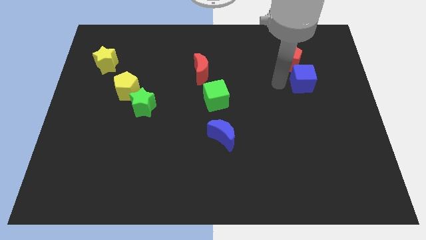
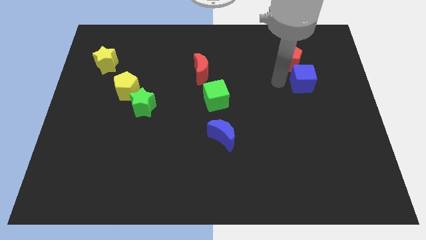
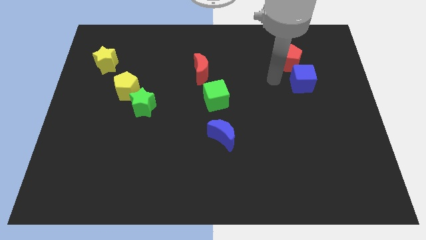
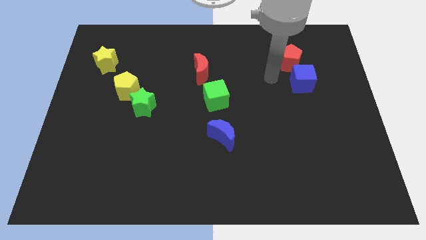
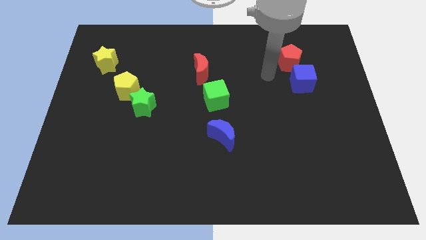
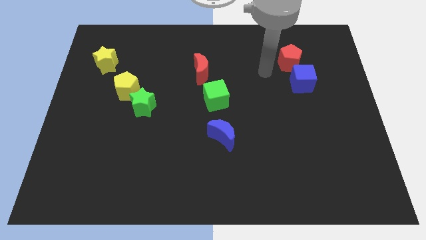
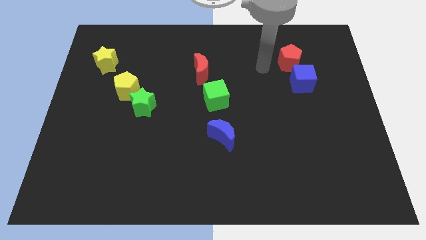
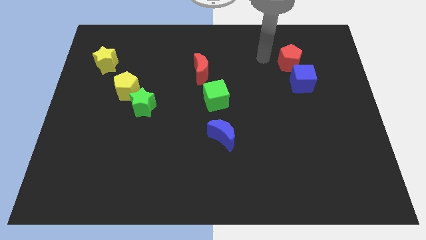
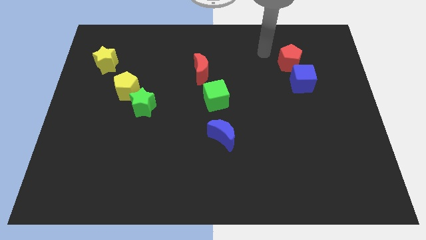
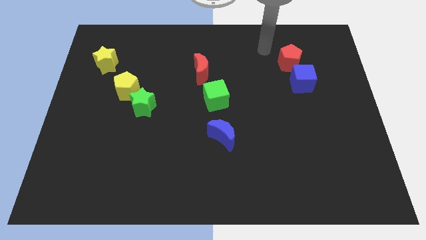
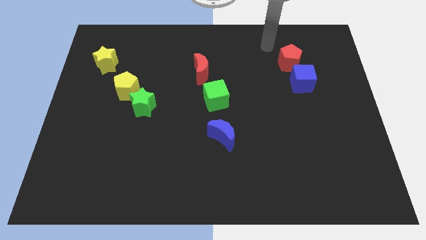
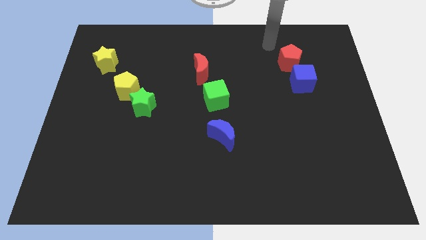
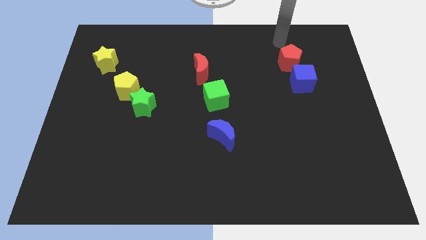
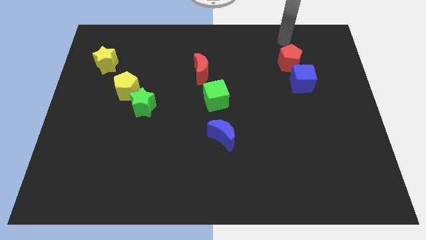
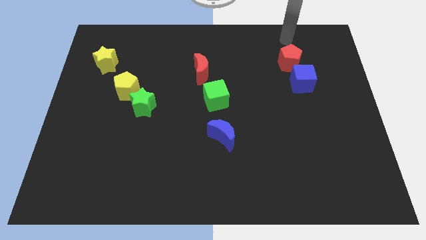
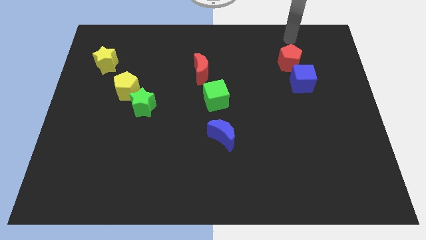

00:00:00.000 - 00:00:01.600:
place your arm on the top of the red pentagon

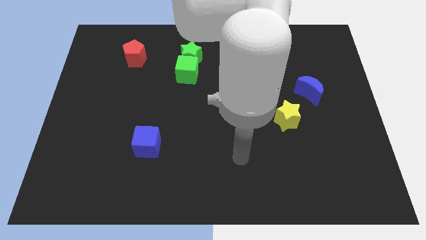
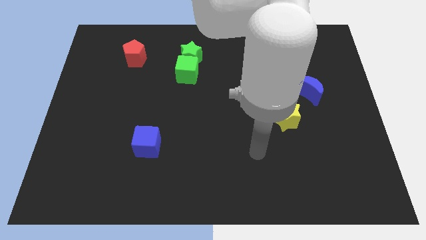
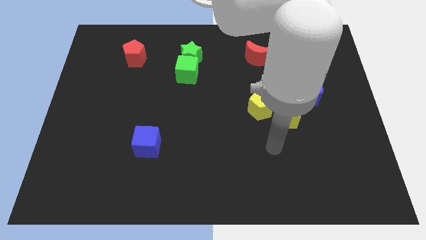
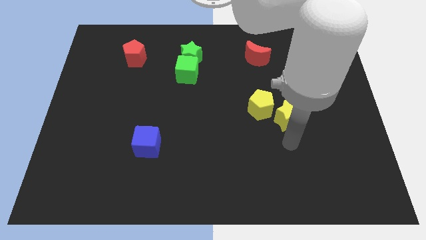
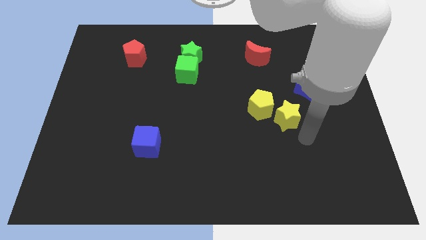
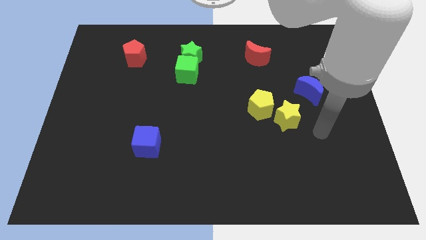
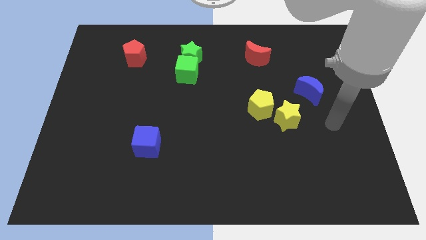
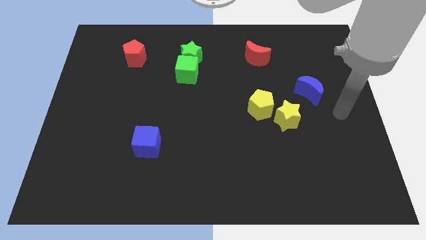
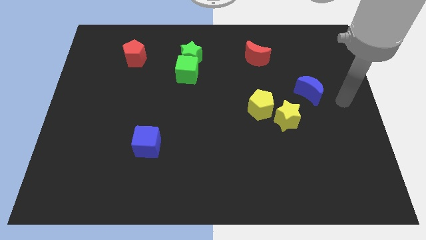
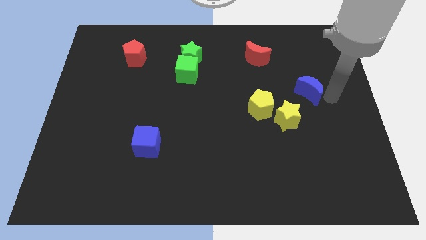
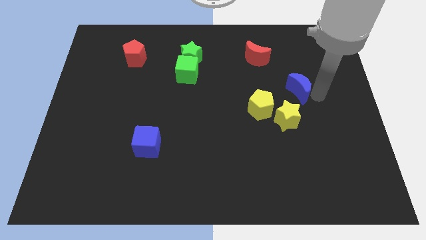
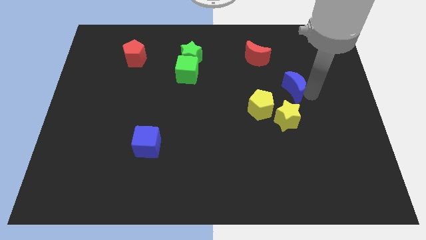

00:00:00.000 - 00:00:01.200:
touch the bottom of blue moon

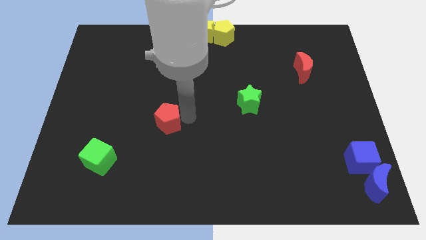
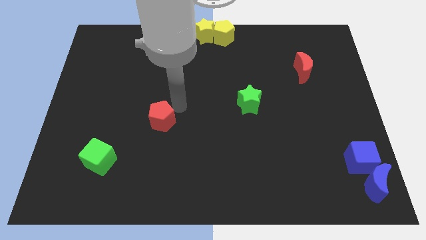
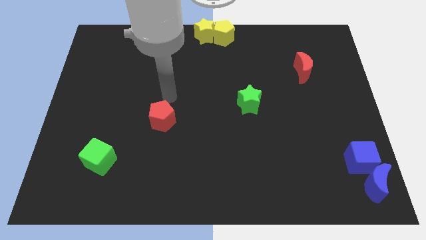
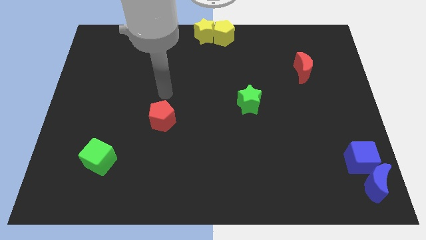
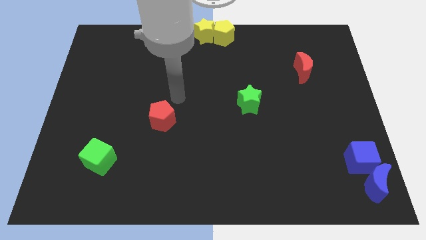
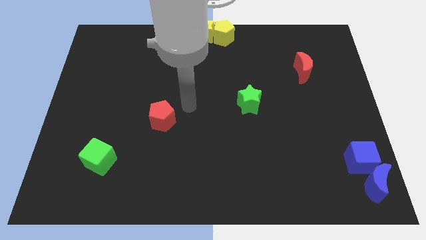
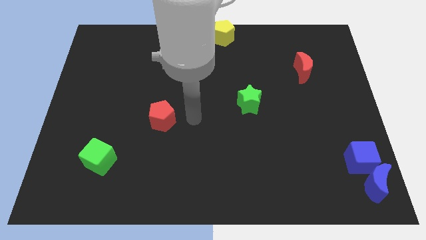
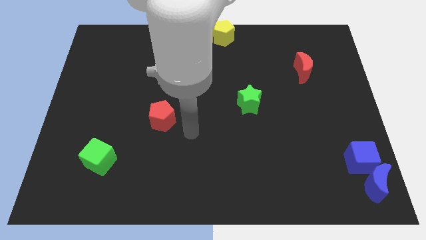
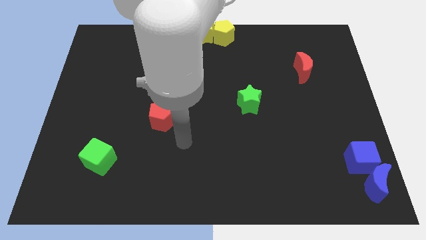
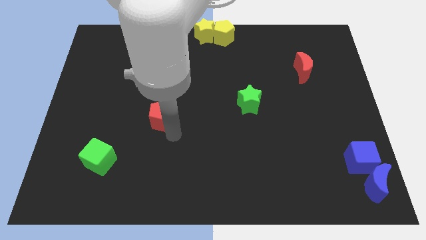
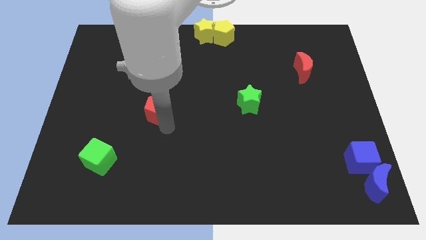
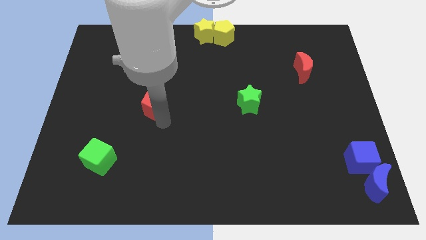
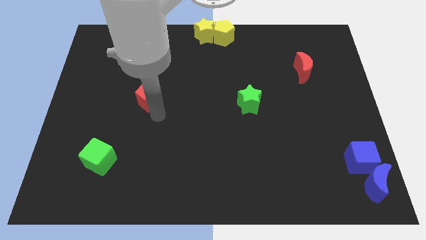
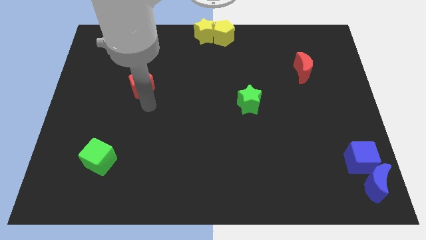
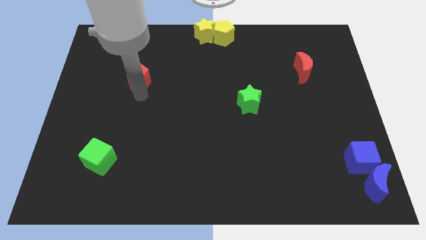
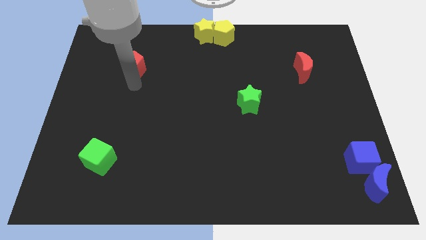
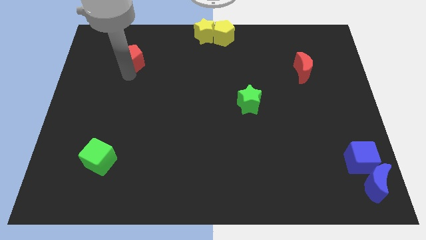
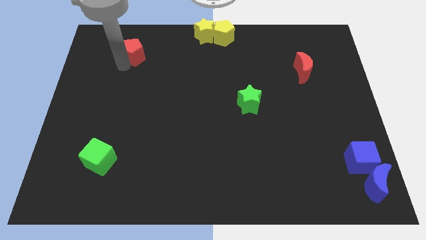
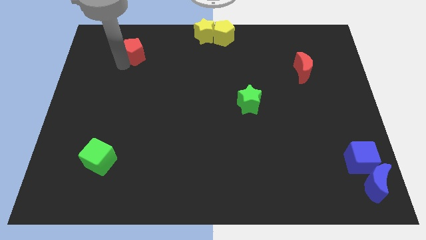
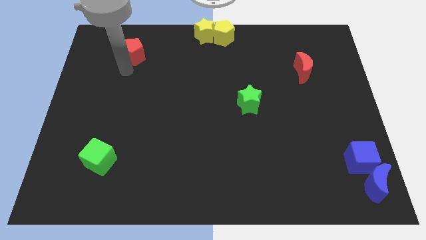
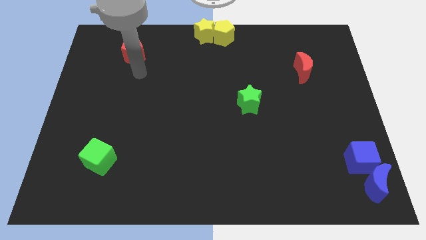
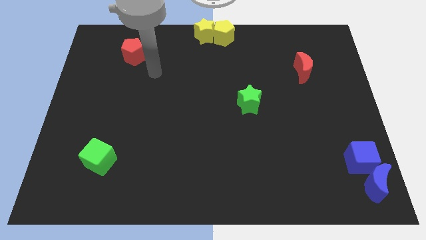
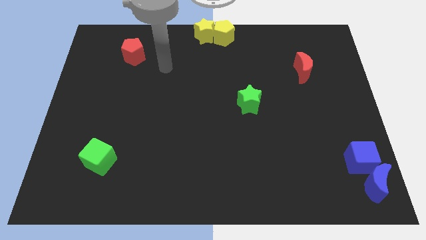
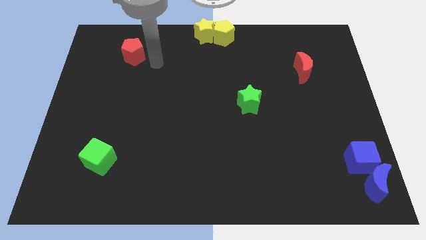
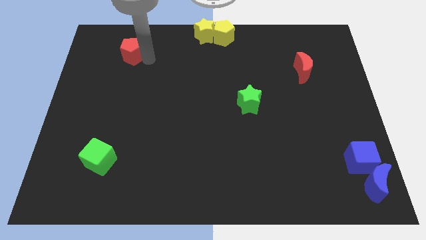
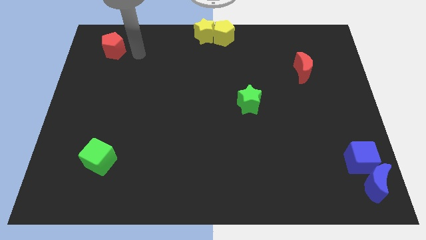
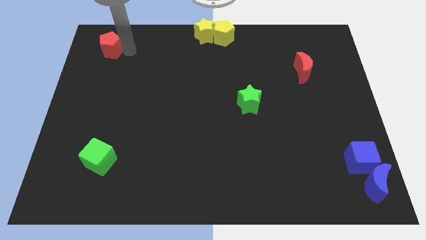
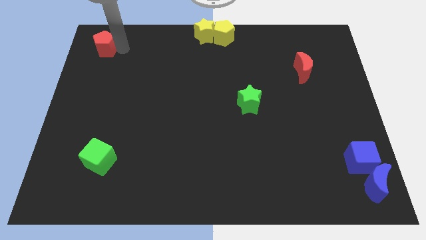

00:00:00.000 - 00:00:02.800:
move red pentagon at top left corner of boards

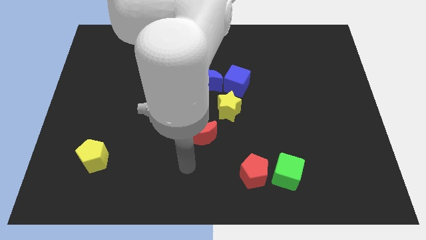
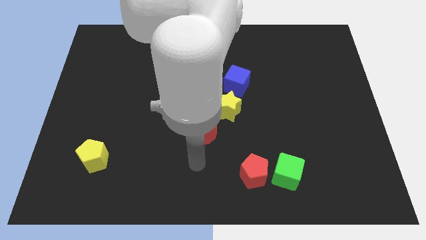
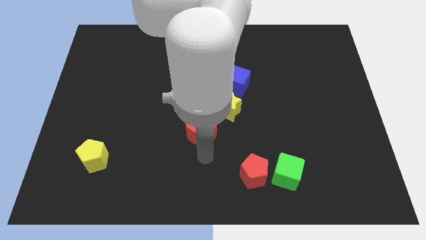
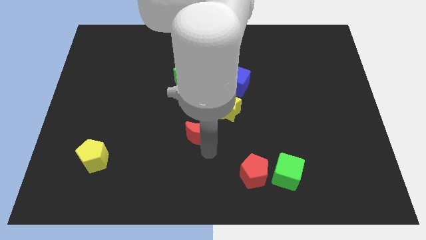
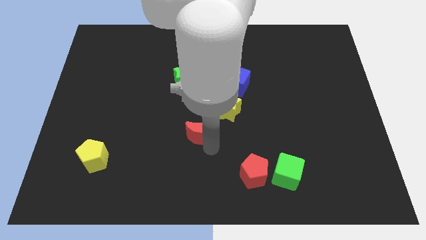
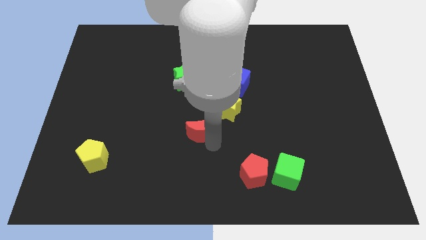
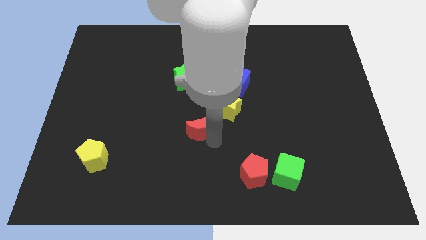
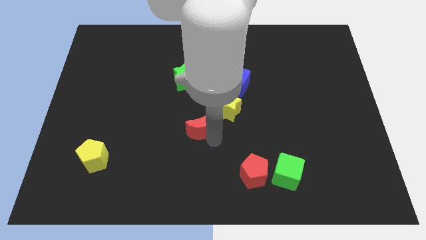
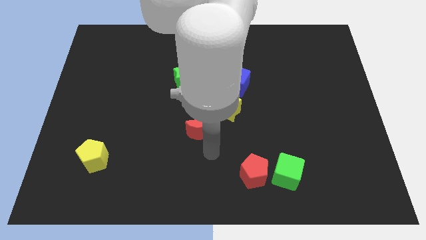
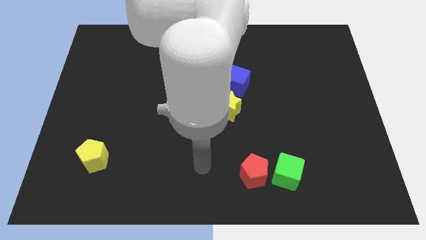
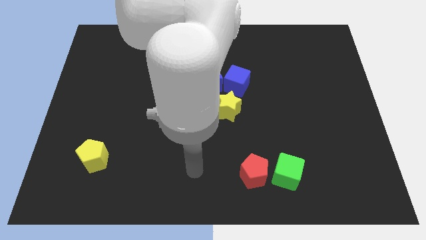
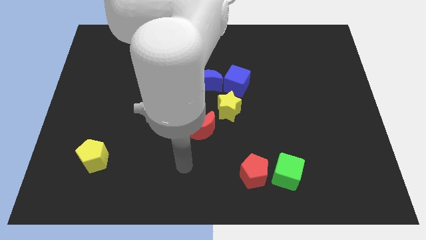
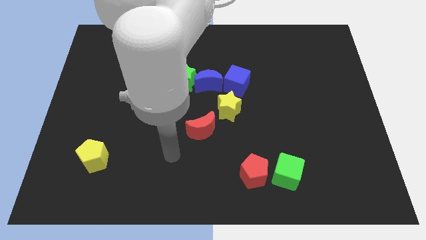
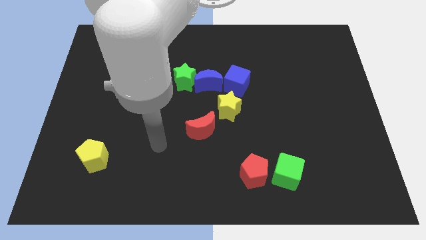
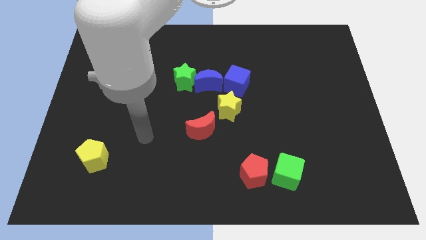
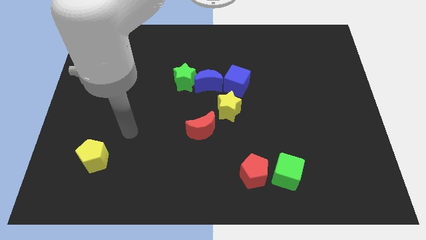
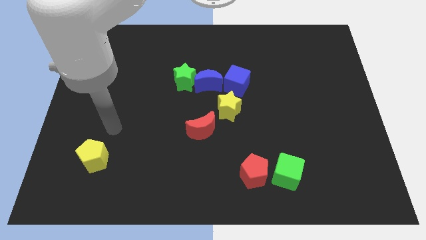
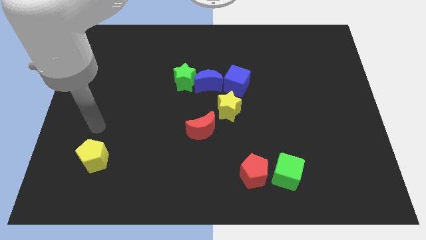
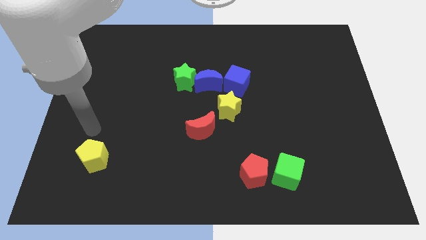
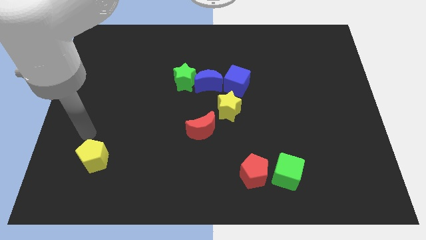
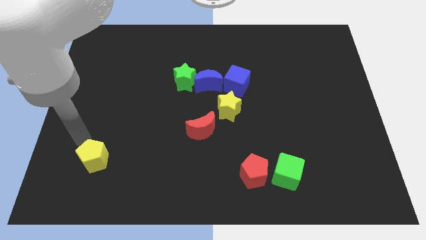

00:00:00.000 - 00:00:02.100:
slide the red moon to the bottom left of the yellow star

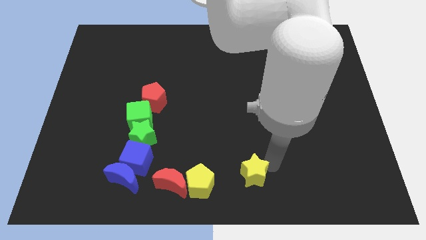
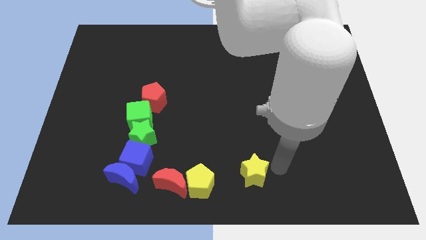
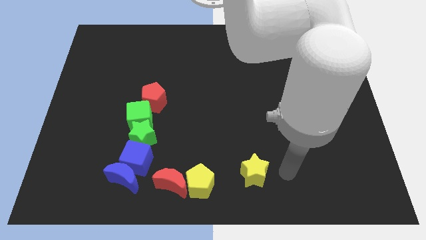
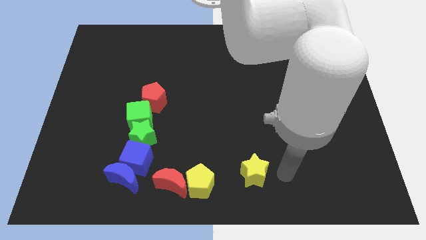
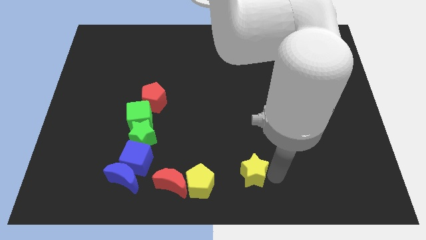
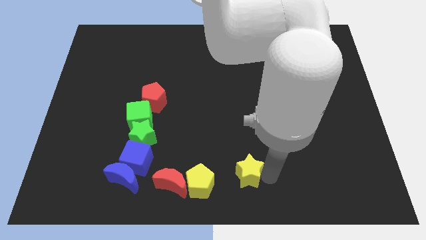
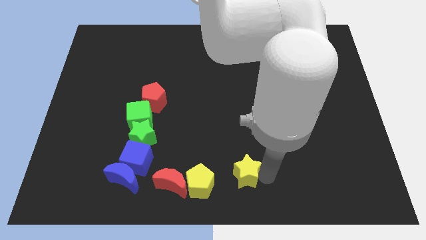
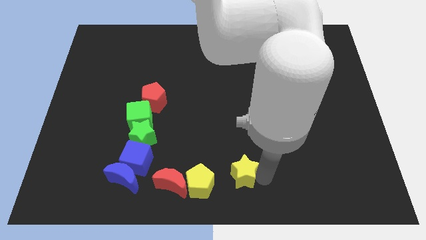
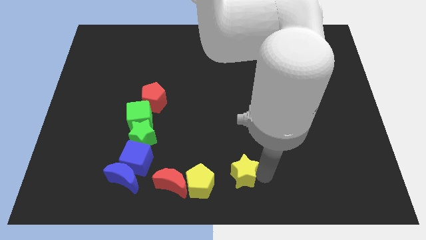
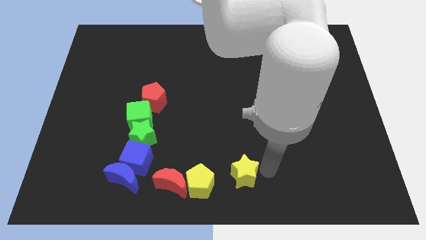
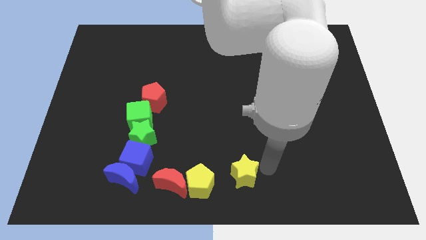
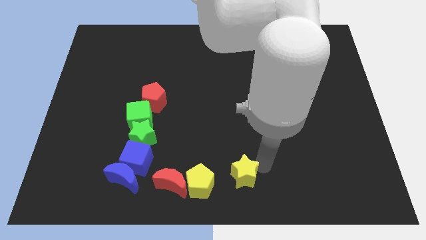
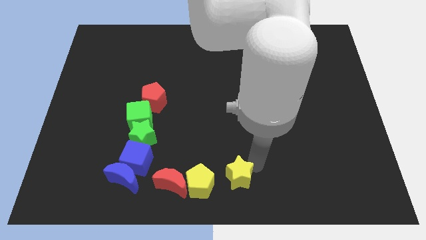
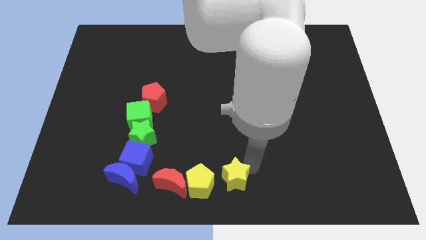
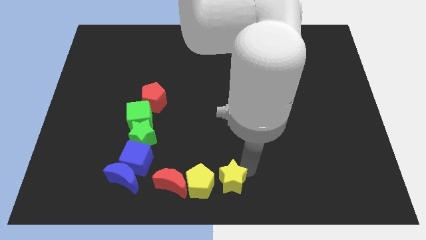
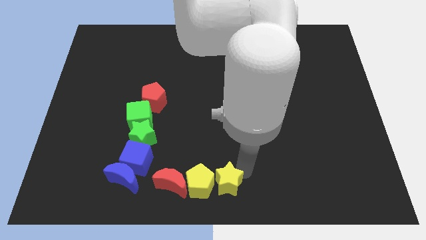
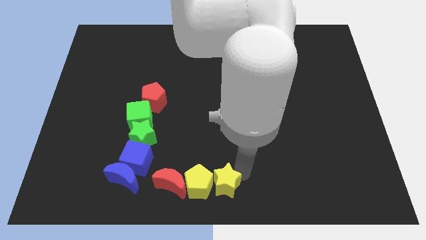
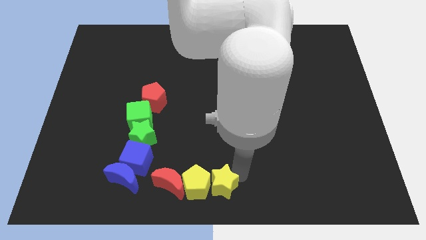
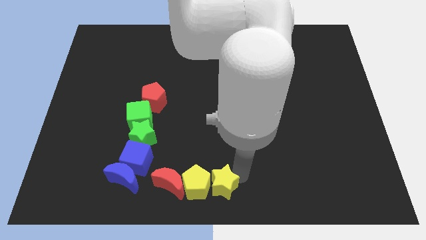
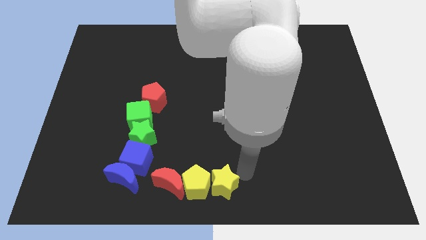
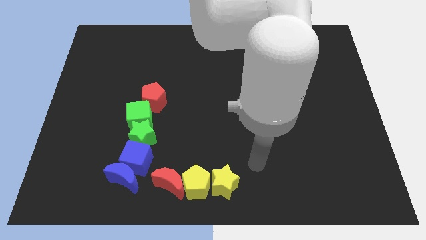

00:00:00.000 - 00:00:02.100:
move the yellow star into the yellow pentagon
